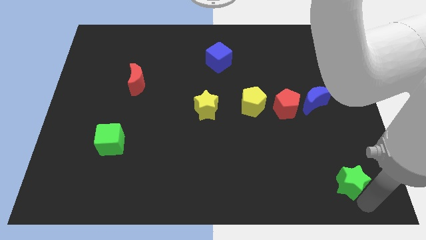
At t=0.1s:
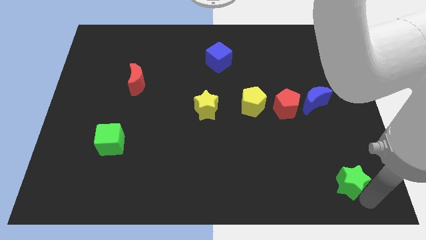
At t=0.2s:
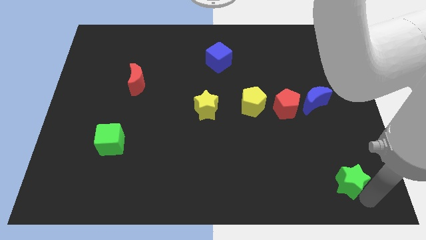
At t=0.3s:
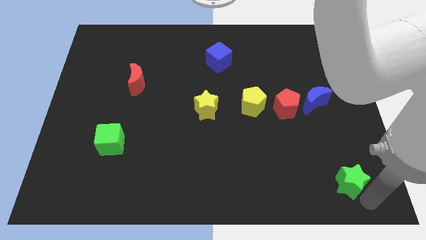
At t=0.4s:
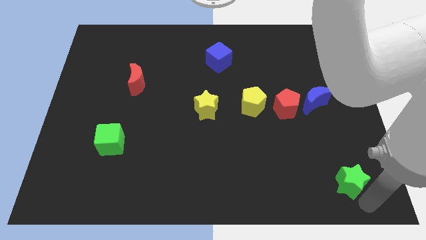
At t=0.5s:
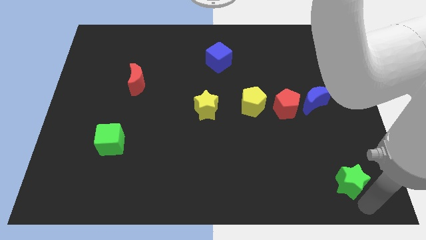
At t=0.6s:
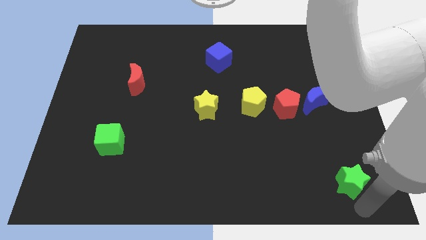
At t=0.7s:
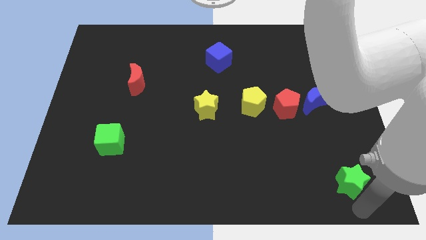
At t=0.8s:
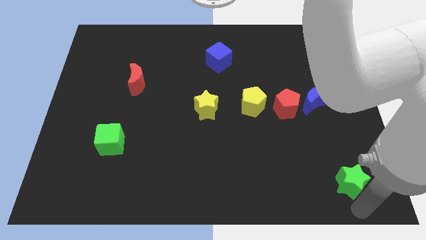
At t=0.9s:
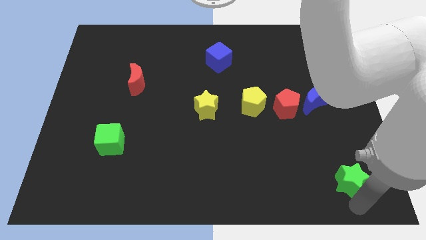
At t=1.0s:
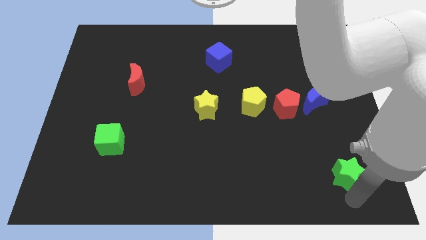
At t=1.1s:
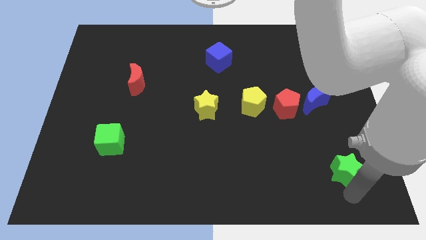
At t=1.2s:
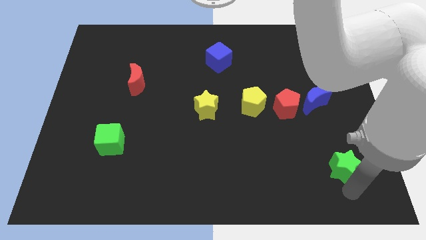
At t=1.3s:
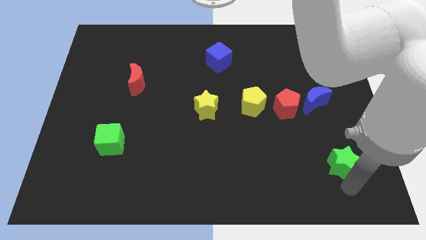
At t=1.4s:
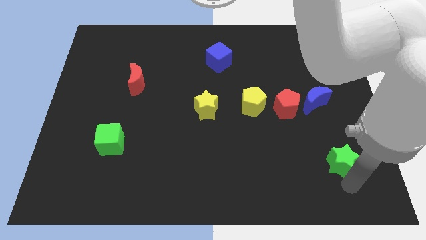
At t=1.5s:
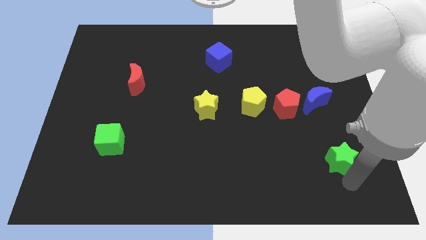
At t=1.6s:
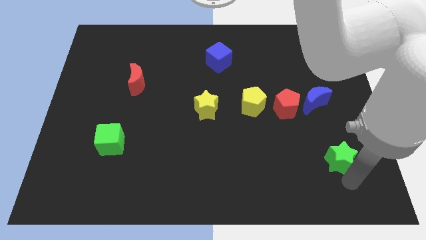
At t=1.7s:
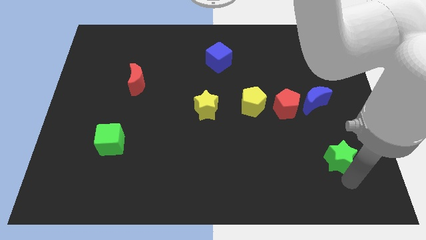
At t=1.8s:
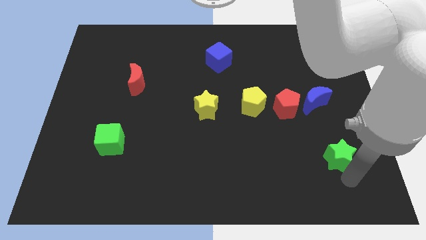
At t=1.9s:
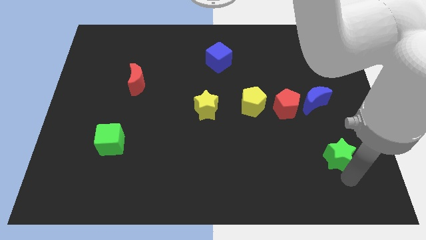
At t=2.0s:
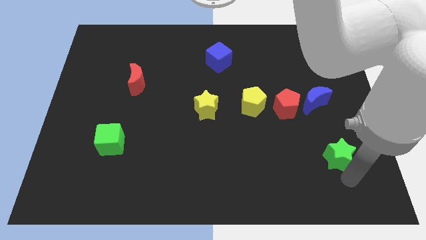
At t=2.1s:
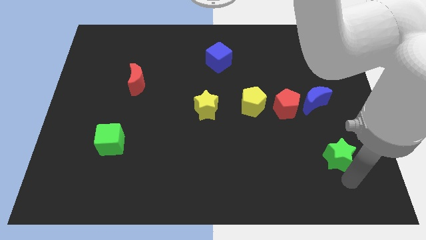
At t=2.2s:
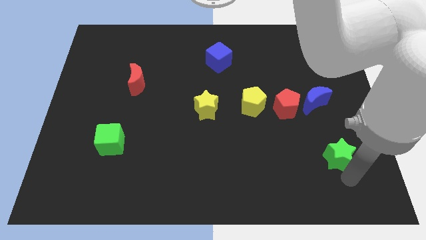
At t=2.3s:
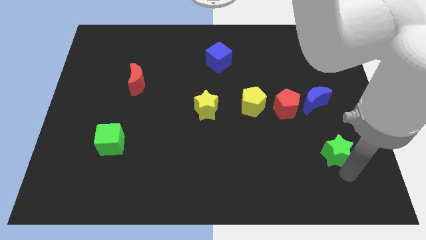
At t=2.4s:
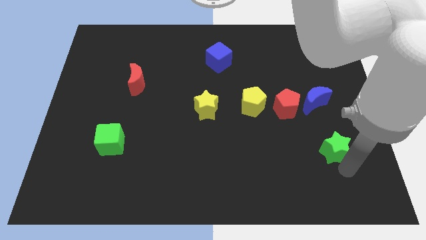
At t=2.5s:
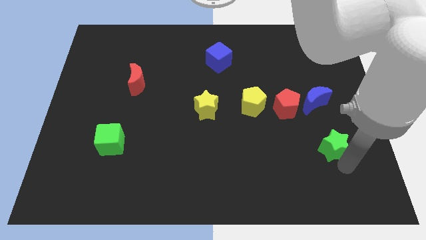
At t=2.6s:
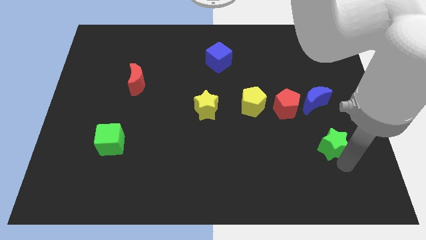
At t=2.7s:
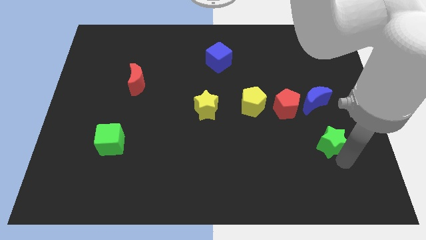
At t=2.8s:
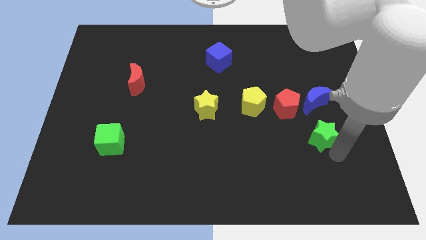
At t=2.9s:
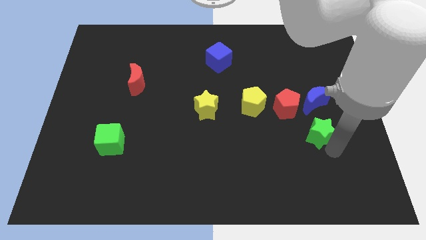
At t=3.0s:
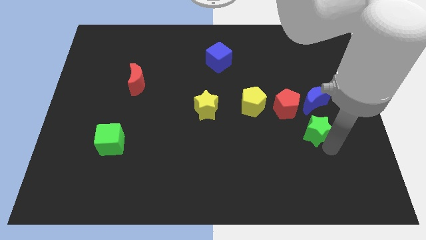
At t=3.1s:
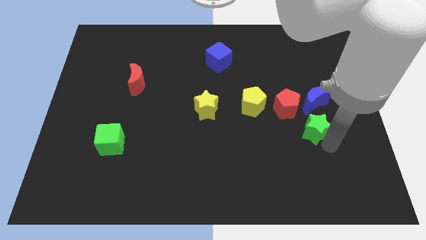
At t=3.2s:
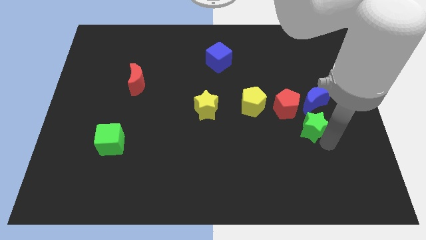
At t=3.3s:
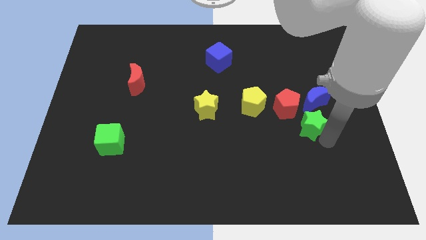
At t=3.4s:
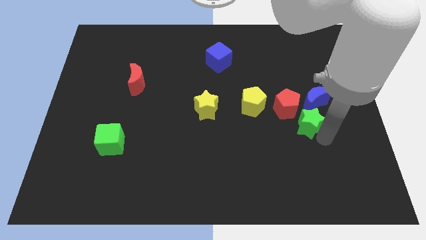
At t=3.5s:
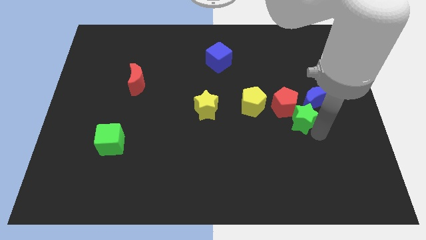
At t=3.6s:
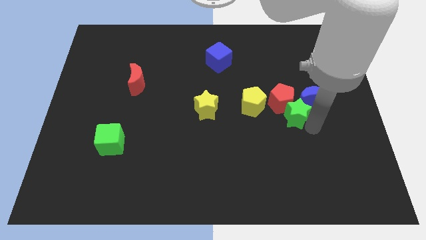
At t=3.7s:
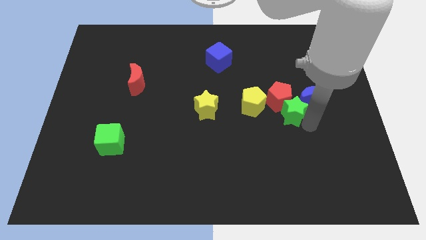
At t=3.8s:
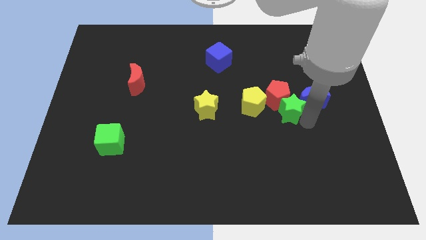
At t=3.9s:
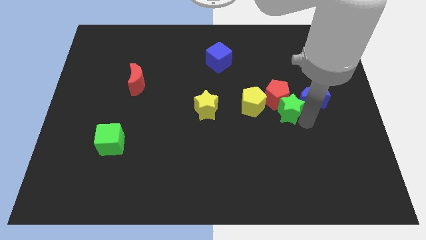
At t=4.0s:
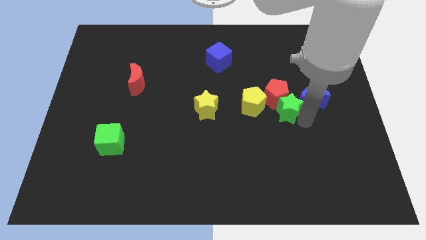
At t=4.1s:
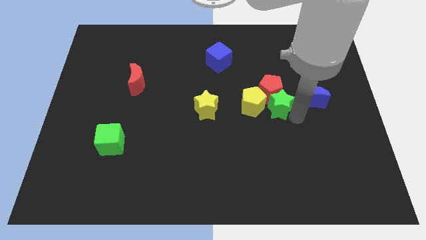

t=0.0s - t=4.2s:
push the green star into the red pentagon

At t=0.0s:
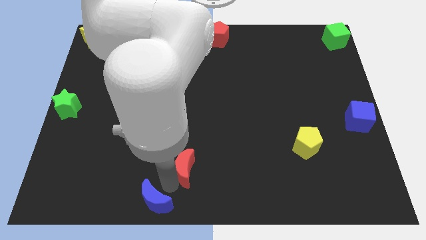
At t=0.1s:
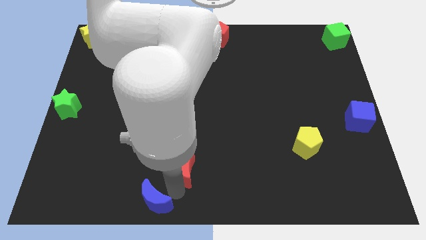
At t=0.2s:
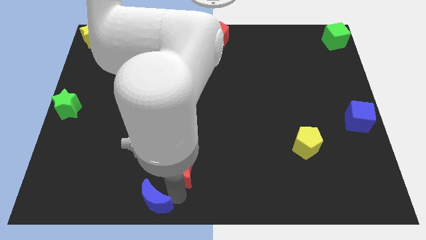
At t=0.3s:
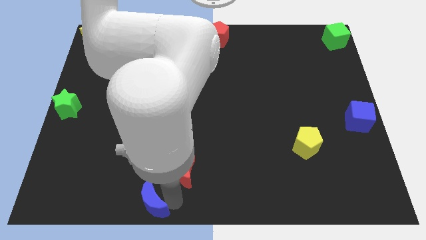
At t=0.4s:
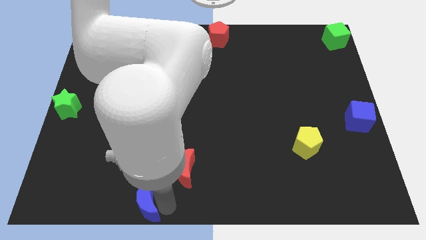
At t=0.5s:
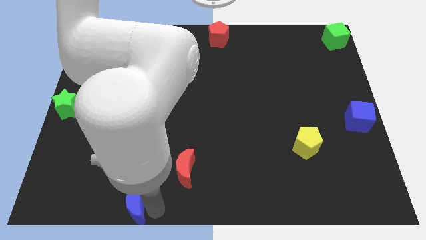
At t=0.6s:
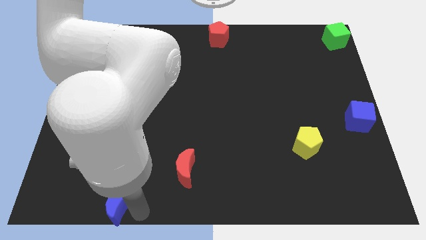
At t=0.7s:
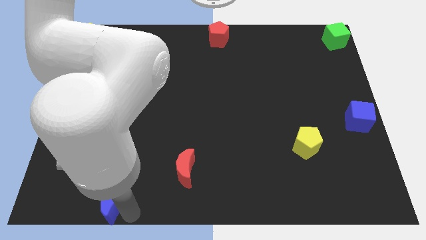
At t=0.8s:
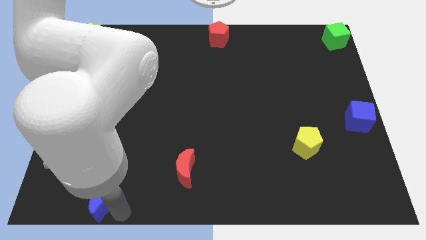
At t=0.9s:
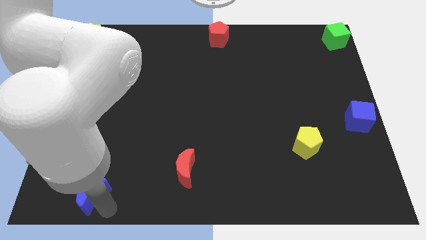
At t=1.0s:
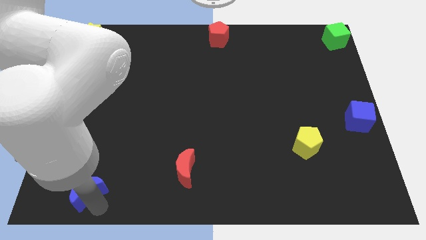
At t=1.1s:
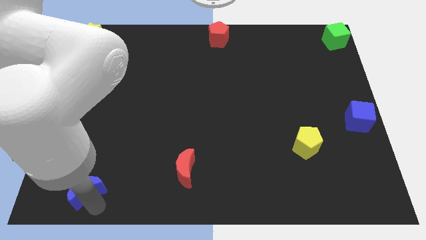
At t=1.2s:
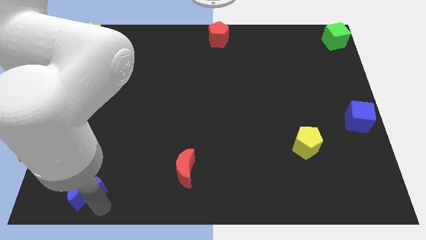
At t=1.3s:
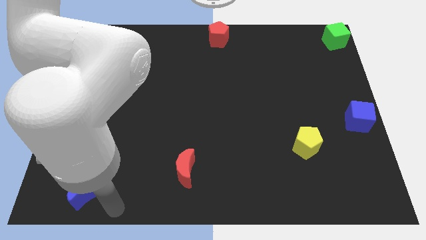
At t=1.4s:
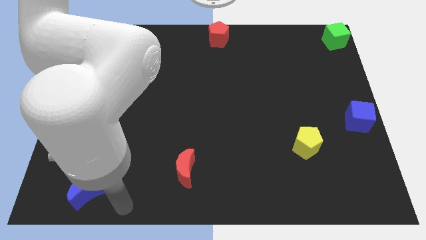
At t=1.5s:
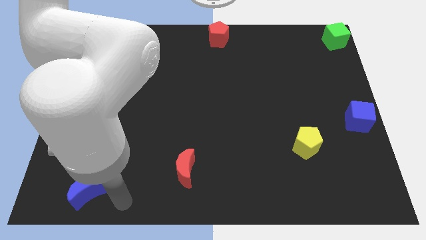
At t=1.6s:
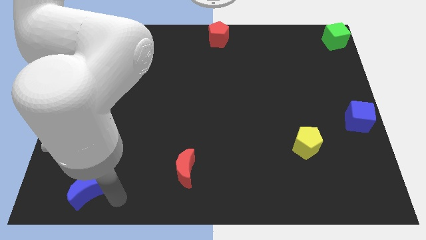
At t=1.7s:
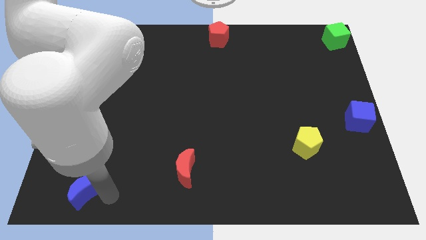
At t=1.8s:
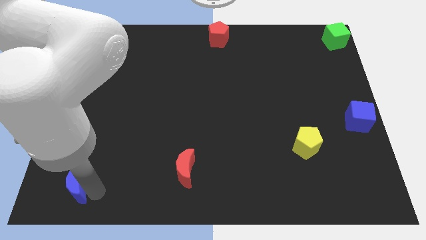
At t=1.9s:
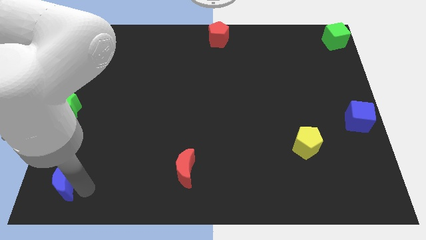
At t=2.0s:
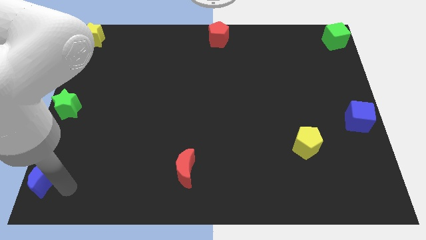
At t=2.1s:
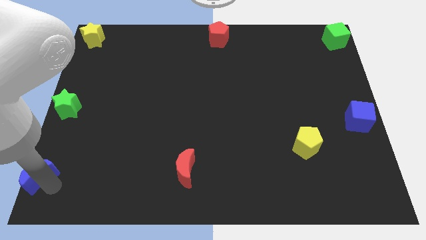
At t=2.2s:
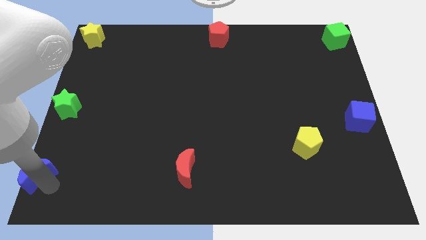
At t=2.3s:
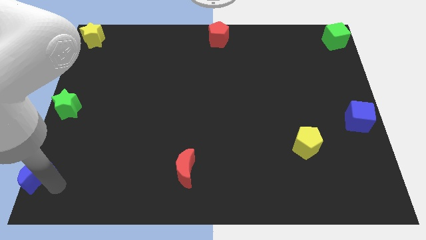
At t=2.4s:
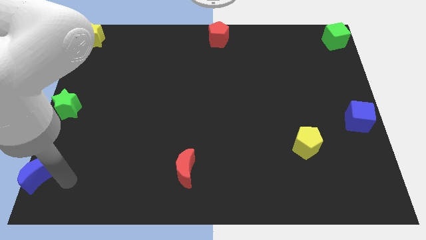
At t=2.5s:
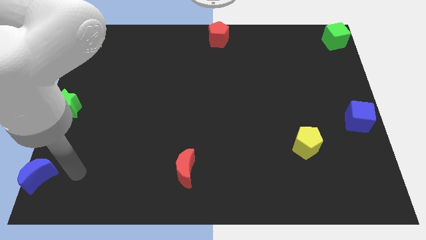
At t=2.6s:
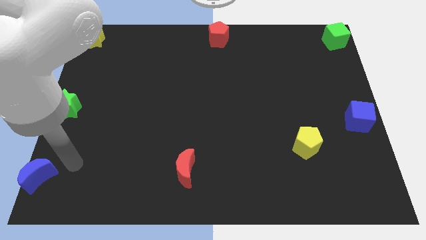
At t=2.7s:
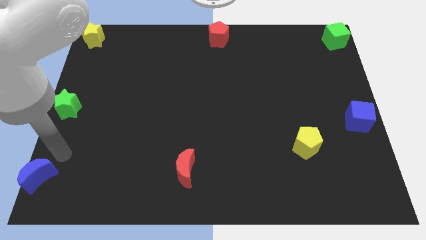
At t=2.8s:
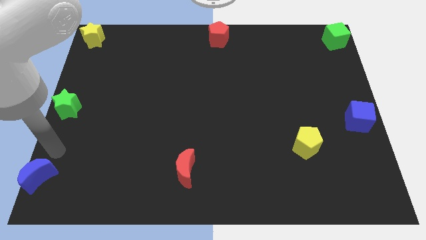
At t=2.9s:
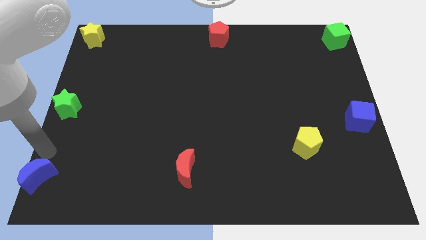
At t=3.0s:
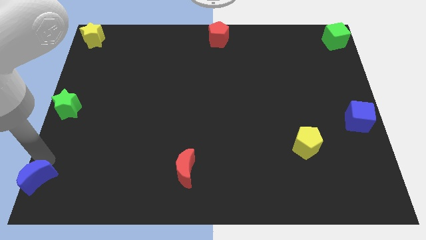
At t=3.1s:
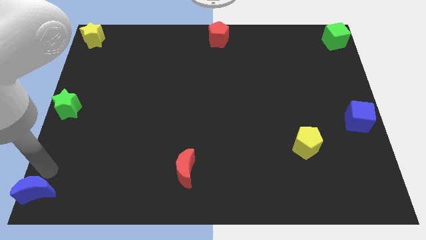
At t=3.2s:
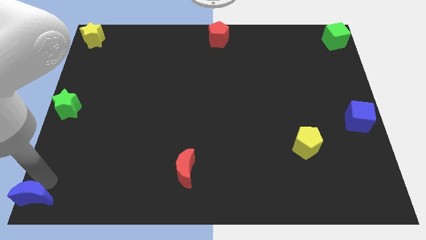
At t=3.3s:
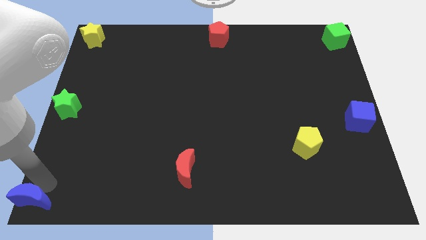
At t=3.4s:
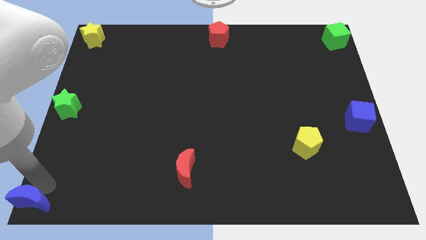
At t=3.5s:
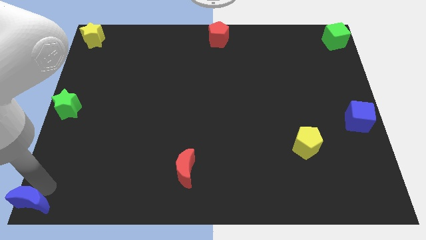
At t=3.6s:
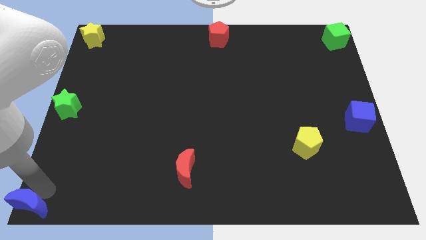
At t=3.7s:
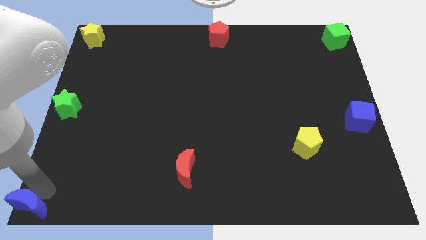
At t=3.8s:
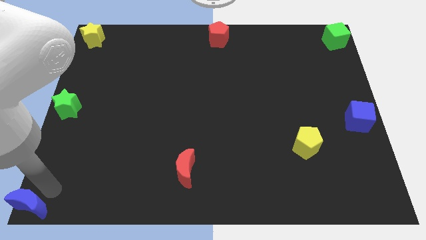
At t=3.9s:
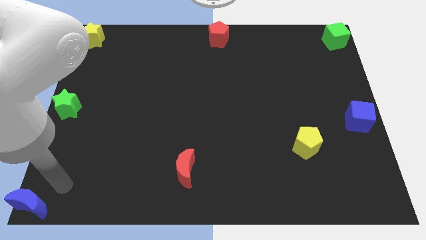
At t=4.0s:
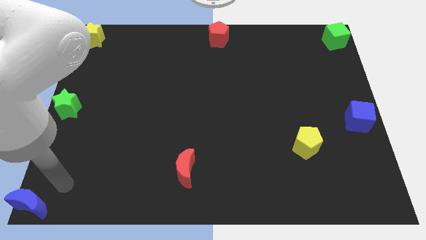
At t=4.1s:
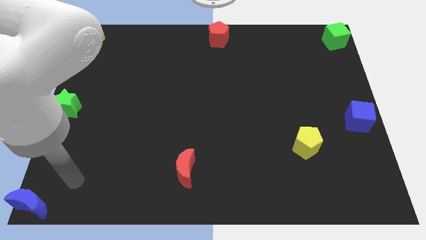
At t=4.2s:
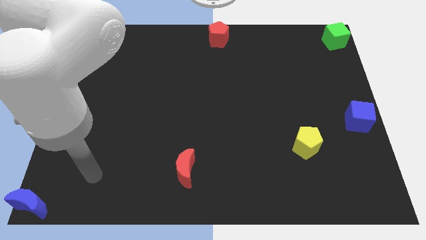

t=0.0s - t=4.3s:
push the blue crescent to the bottom left corner of the board

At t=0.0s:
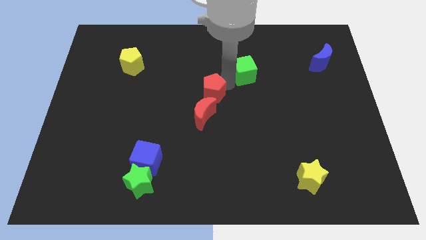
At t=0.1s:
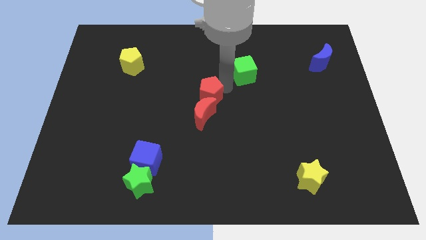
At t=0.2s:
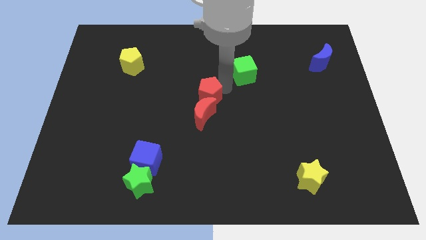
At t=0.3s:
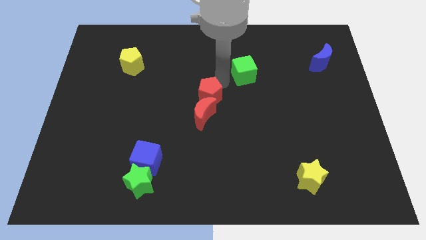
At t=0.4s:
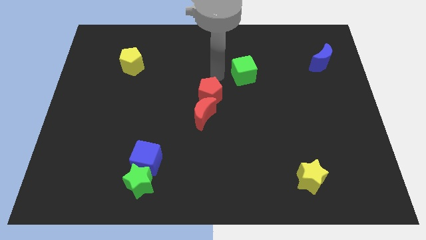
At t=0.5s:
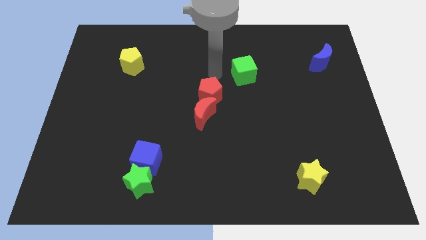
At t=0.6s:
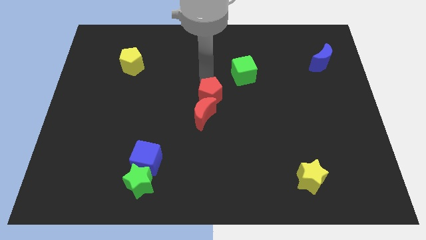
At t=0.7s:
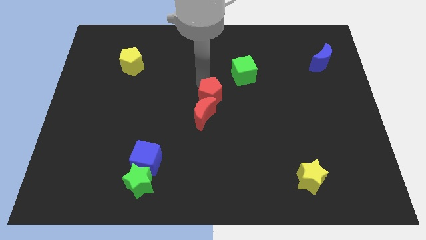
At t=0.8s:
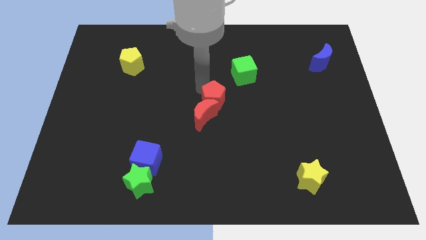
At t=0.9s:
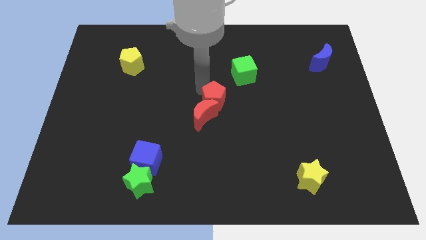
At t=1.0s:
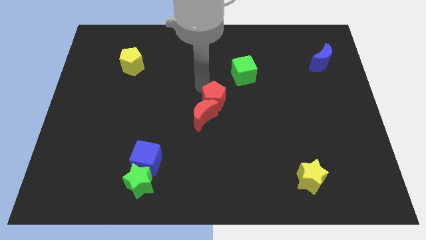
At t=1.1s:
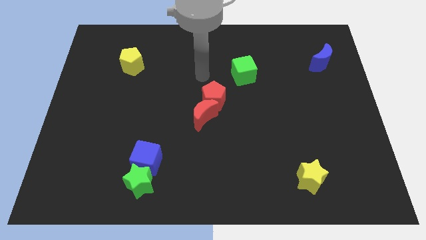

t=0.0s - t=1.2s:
push the red pentagon into the red crescent
